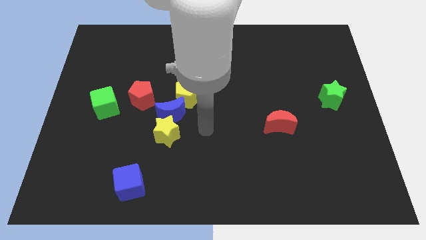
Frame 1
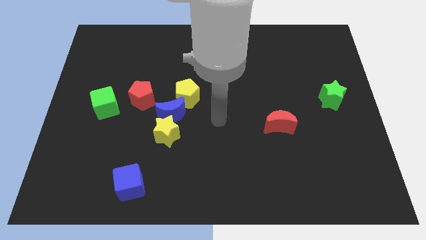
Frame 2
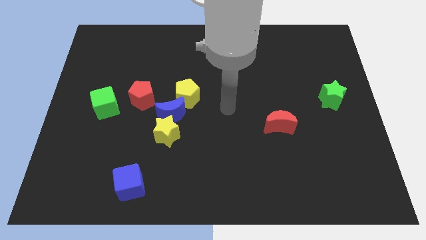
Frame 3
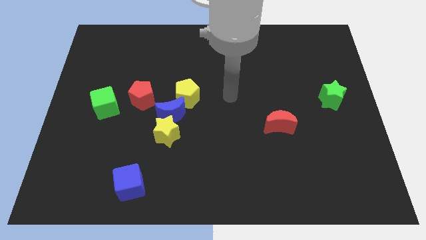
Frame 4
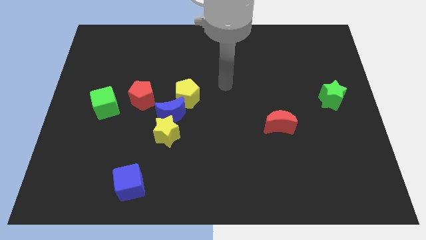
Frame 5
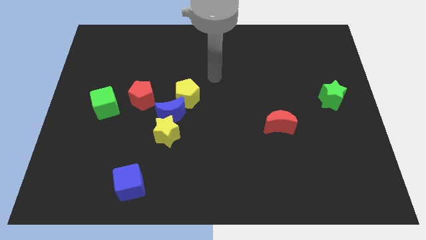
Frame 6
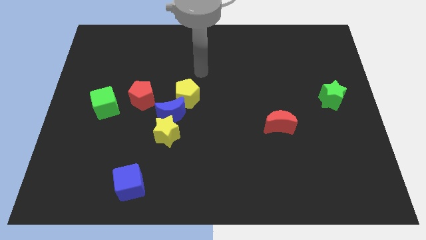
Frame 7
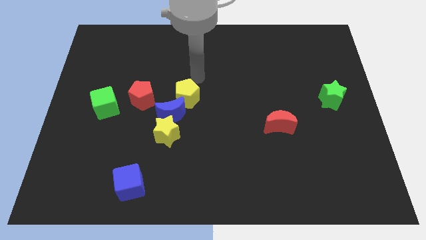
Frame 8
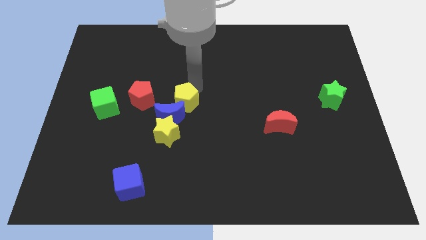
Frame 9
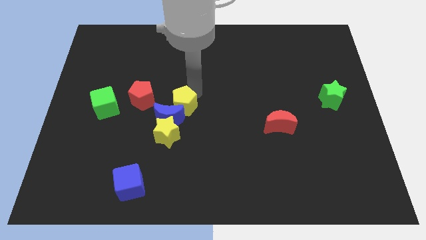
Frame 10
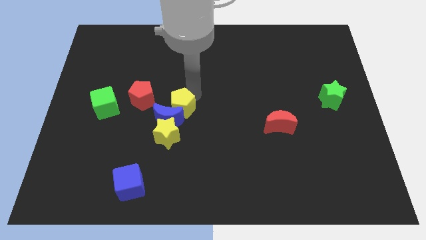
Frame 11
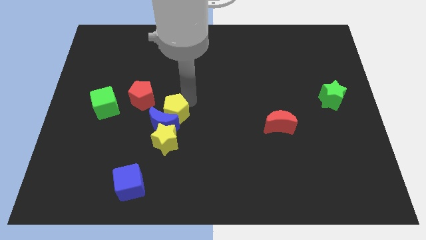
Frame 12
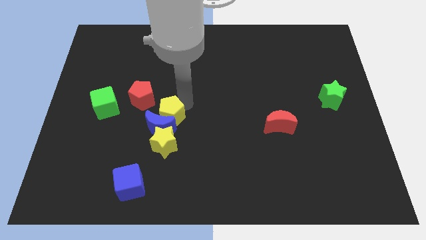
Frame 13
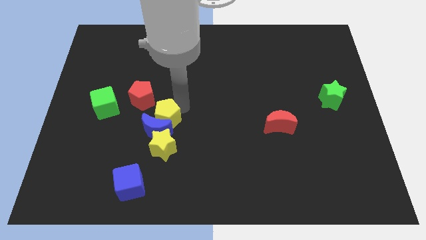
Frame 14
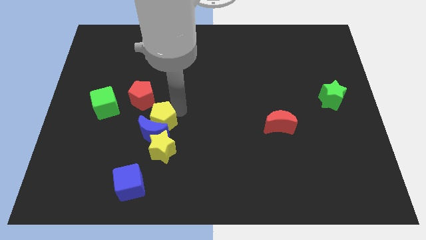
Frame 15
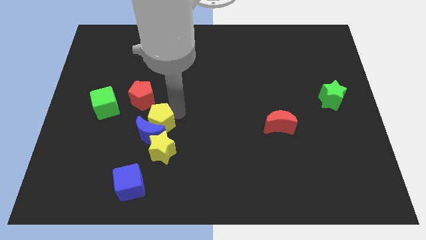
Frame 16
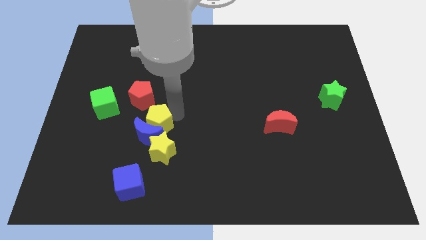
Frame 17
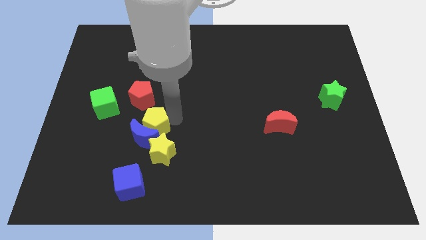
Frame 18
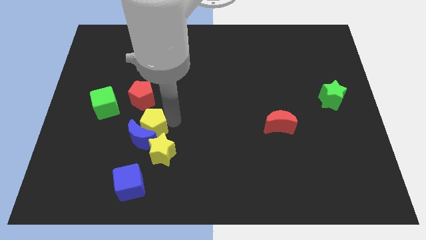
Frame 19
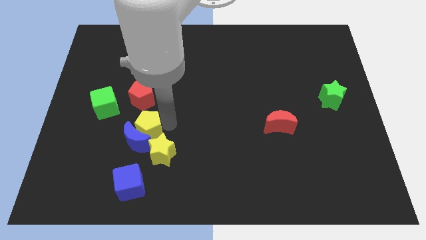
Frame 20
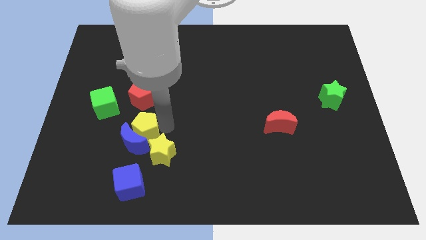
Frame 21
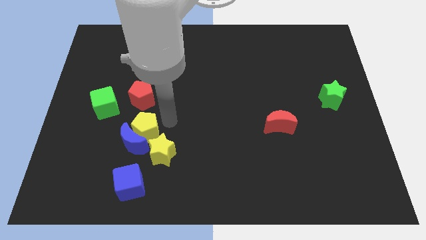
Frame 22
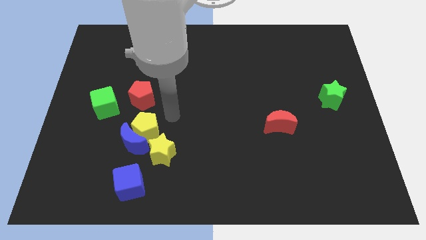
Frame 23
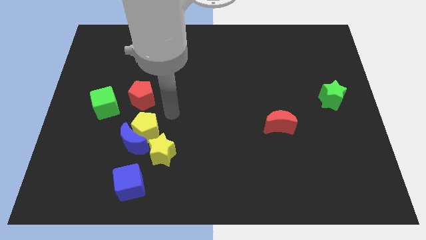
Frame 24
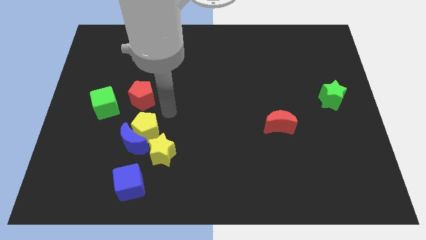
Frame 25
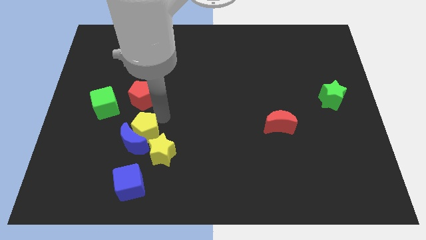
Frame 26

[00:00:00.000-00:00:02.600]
place the yellow pentagon in between the red pentagon and yellow star

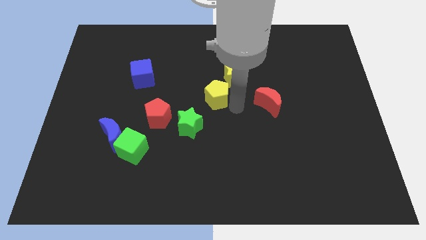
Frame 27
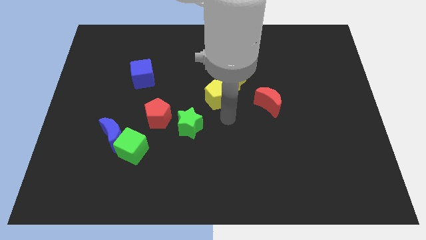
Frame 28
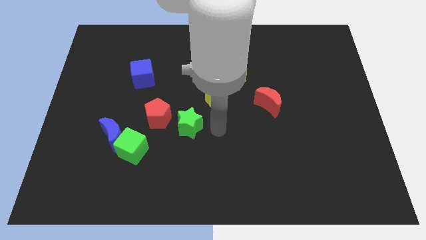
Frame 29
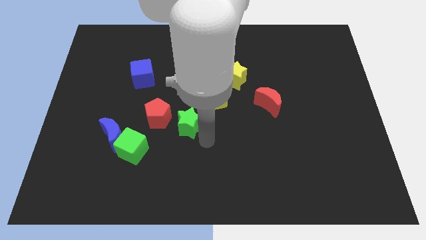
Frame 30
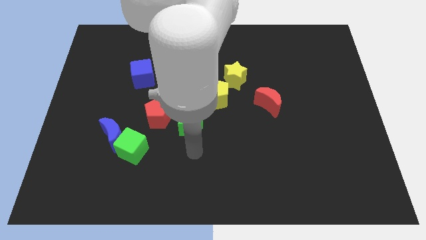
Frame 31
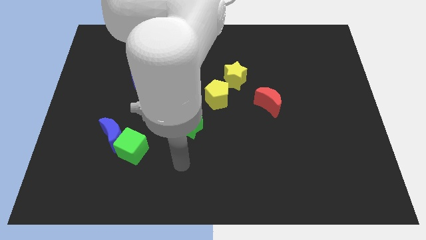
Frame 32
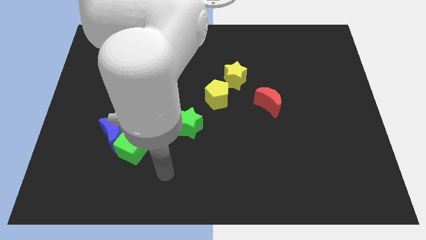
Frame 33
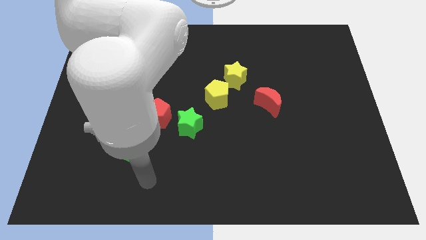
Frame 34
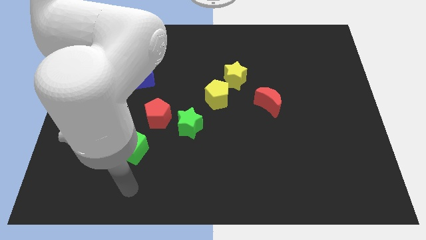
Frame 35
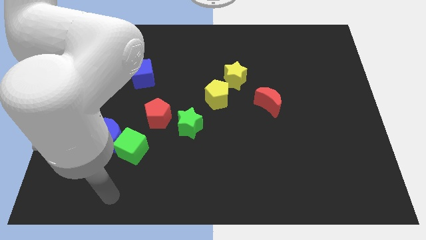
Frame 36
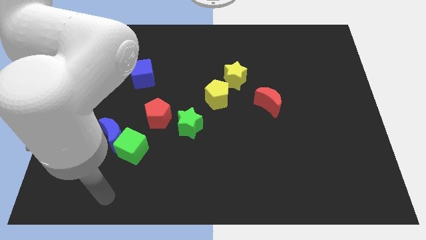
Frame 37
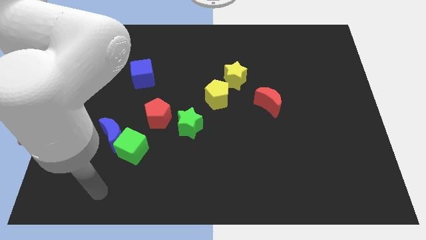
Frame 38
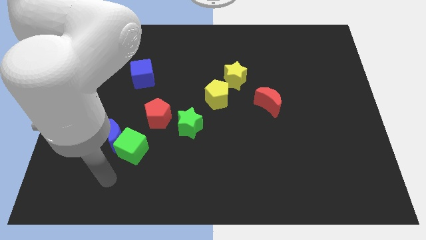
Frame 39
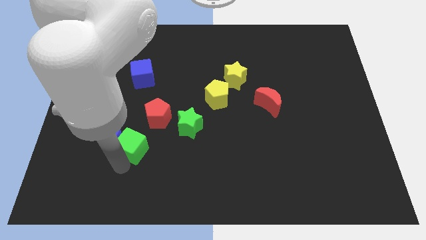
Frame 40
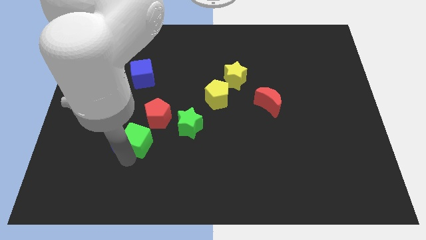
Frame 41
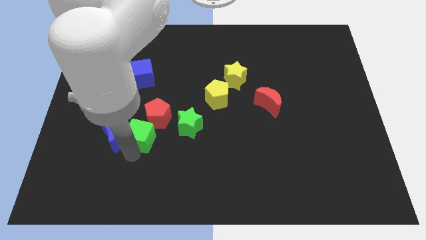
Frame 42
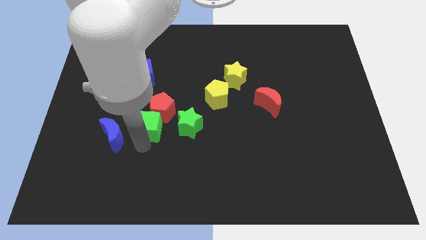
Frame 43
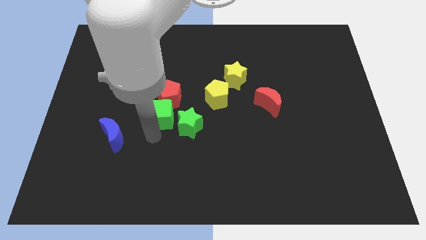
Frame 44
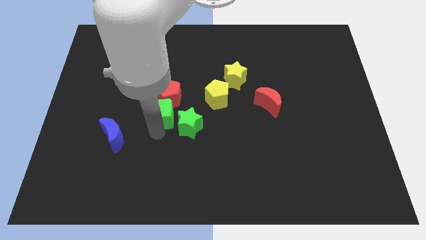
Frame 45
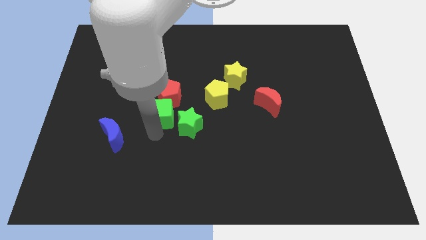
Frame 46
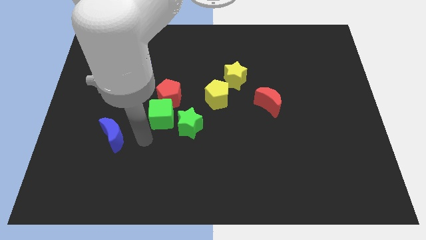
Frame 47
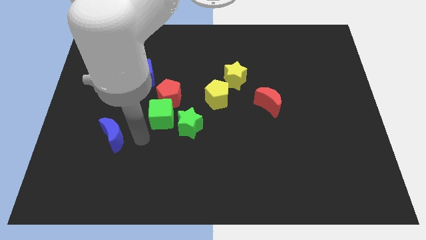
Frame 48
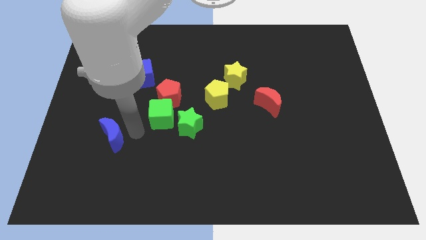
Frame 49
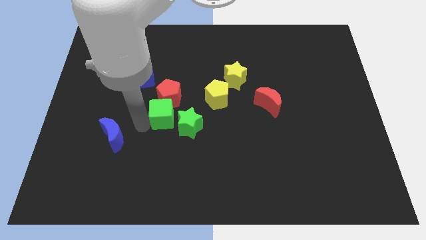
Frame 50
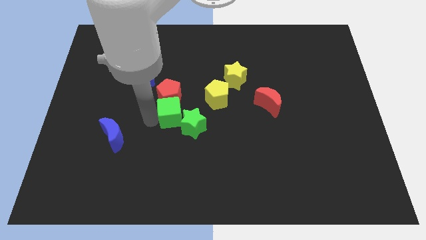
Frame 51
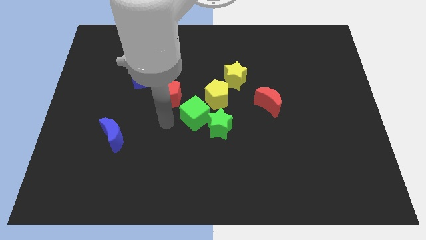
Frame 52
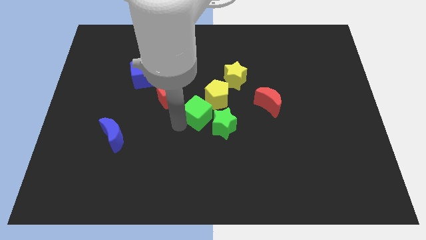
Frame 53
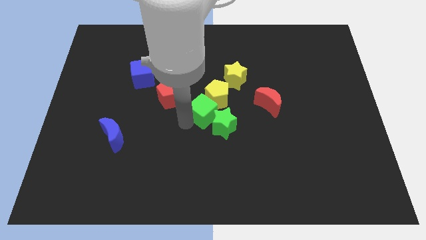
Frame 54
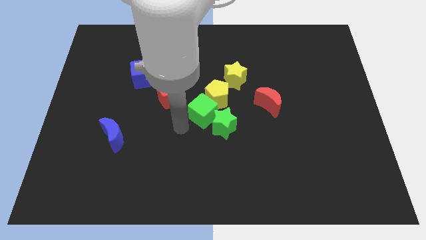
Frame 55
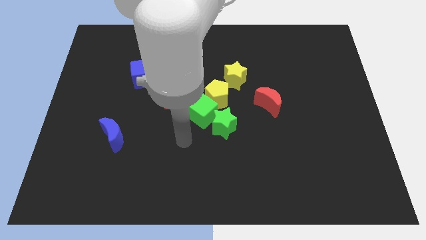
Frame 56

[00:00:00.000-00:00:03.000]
push the green cube into the yellow pentagon

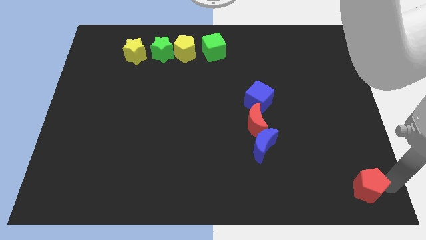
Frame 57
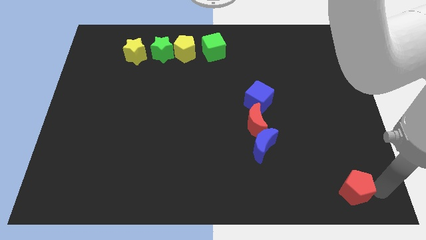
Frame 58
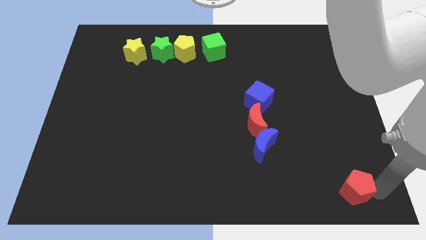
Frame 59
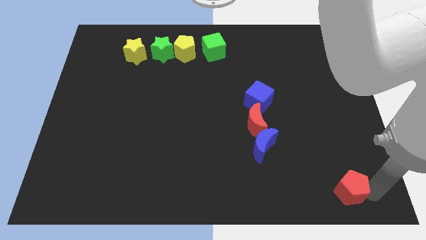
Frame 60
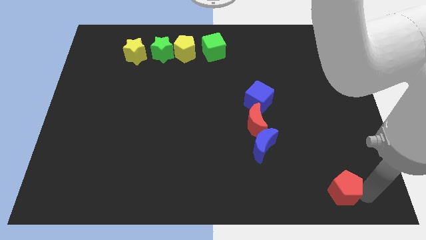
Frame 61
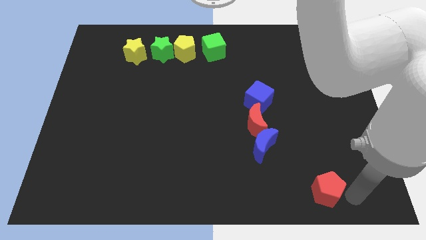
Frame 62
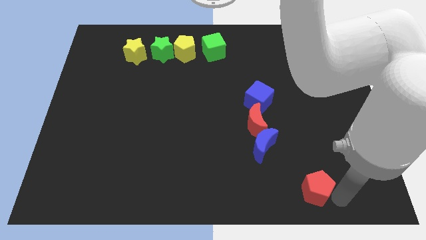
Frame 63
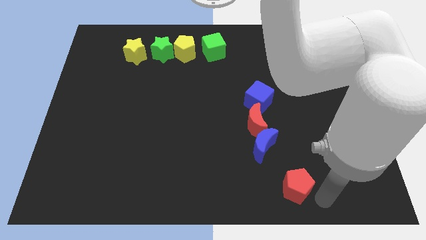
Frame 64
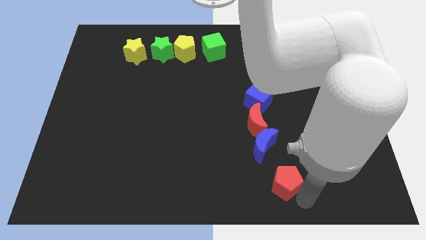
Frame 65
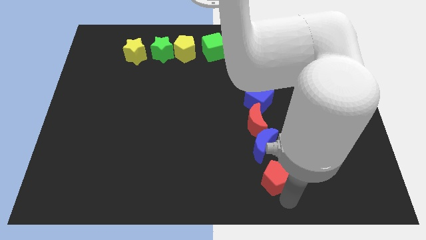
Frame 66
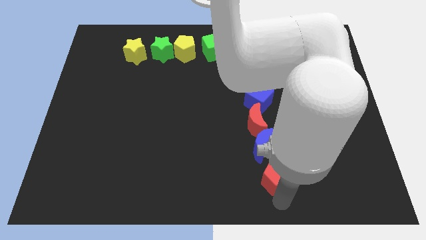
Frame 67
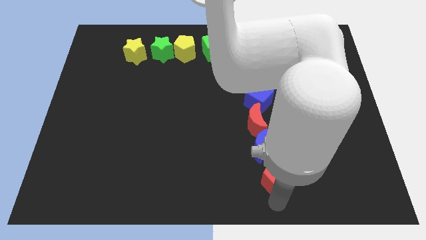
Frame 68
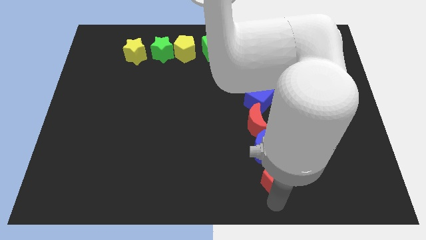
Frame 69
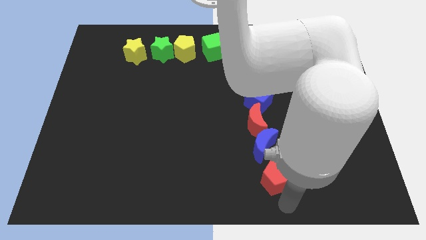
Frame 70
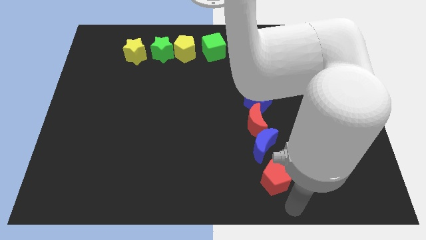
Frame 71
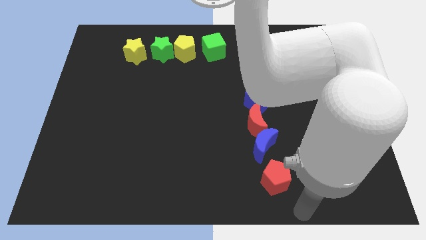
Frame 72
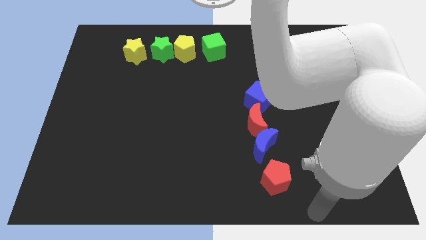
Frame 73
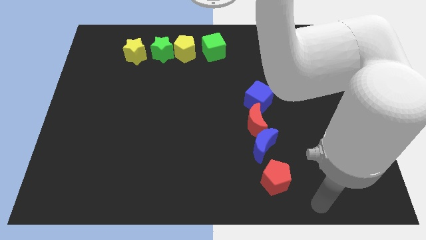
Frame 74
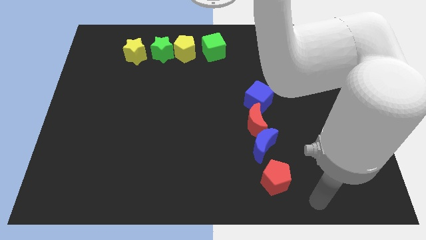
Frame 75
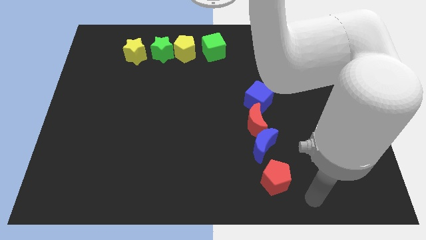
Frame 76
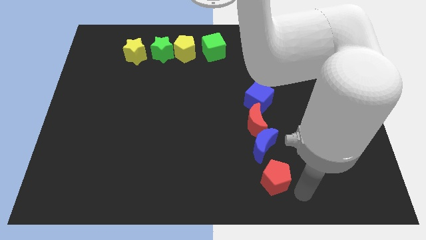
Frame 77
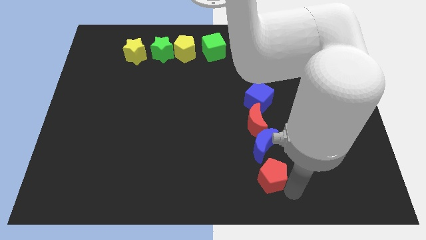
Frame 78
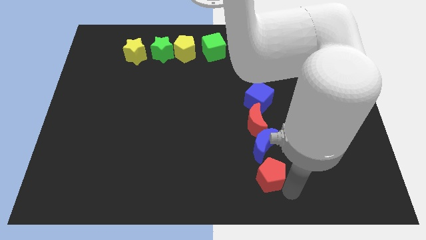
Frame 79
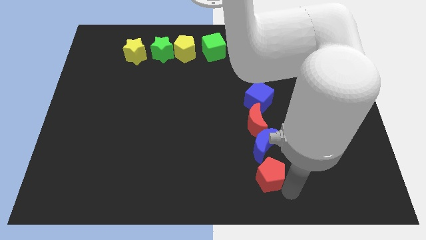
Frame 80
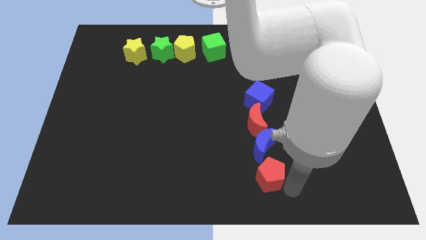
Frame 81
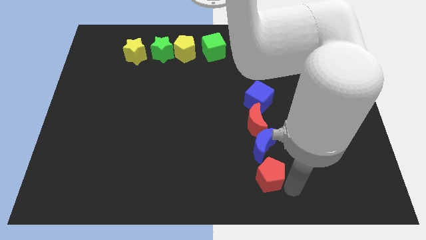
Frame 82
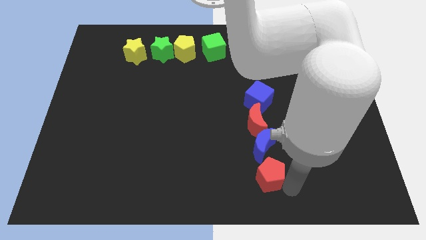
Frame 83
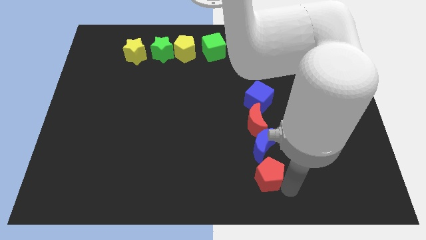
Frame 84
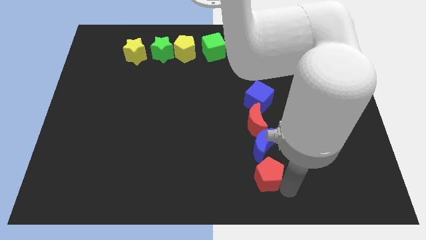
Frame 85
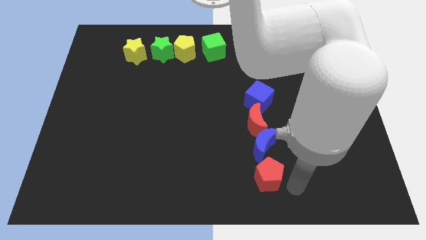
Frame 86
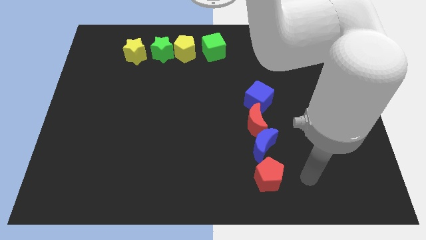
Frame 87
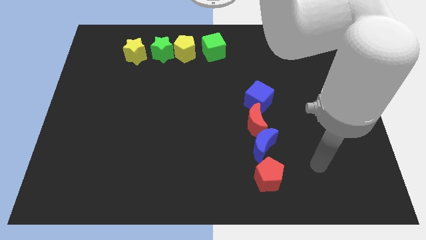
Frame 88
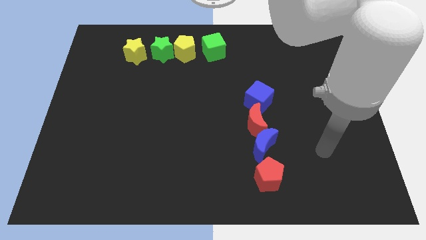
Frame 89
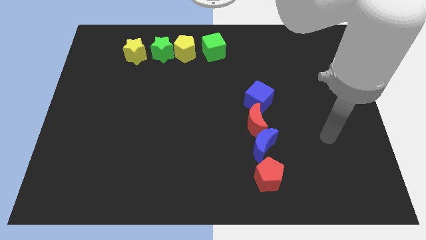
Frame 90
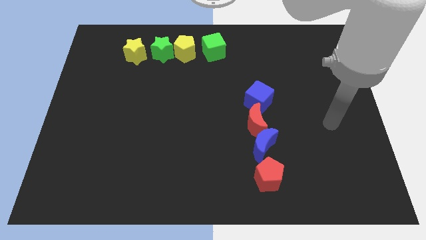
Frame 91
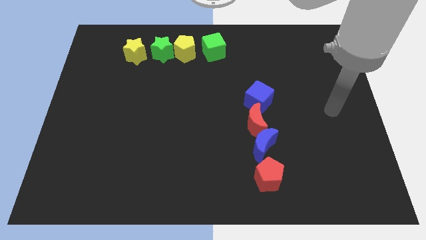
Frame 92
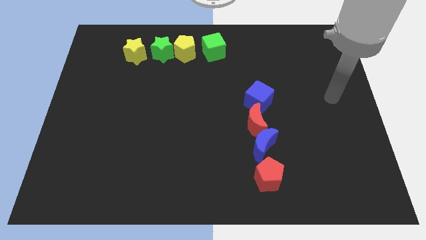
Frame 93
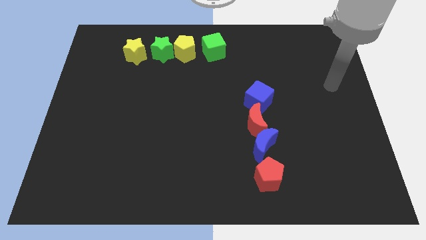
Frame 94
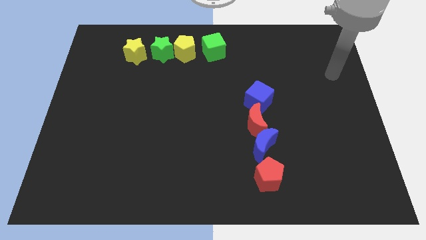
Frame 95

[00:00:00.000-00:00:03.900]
adjust the red pentagon to form a vertical line with the red and blue blocks
